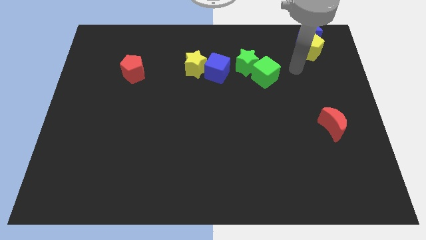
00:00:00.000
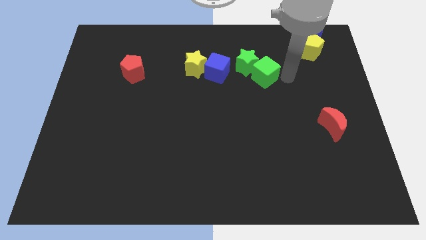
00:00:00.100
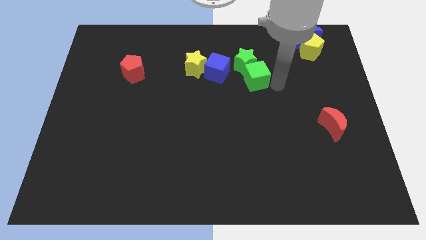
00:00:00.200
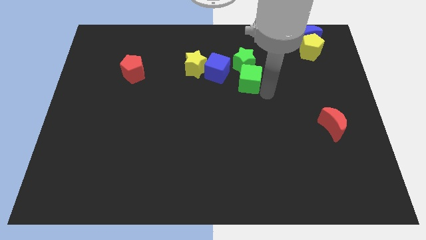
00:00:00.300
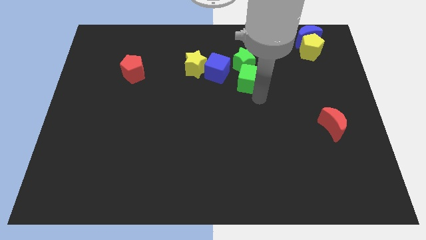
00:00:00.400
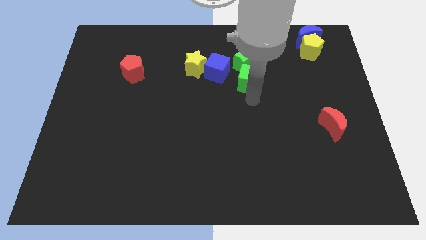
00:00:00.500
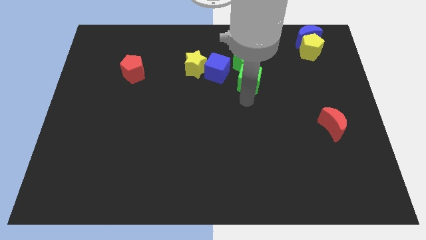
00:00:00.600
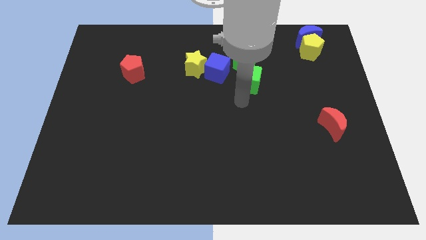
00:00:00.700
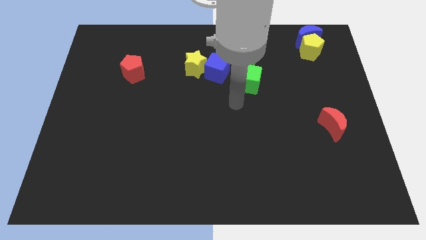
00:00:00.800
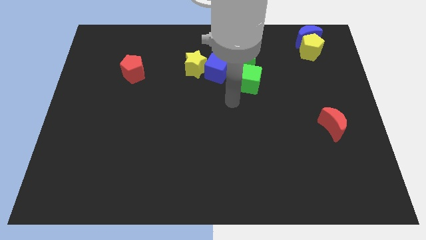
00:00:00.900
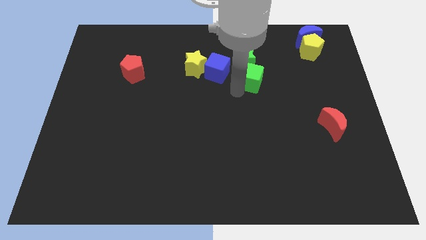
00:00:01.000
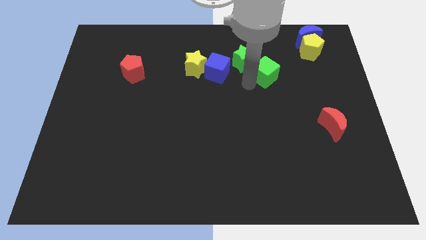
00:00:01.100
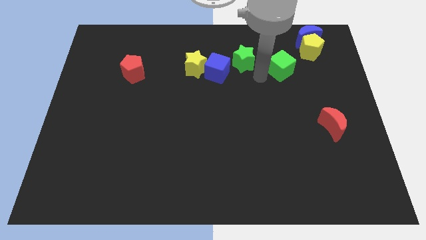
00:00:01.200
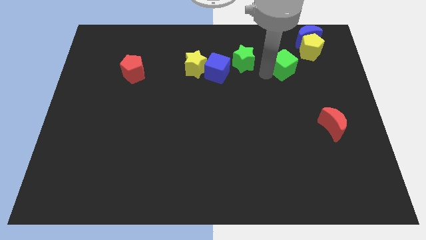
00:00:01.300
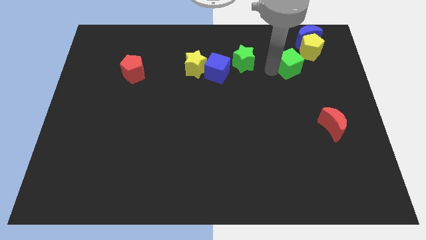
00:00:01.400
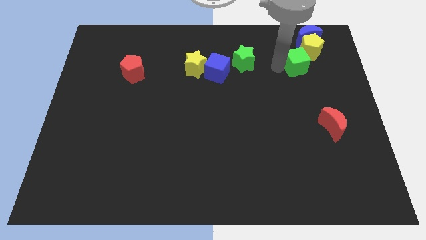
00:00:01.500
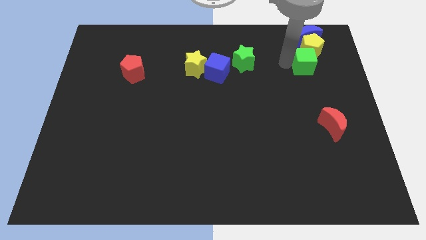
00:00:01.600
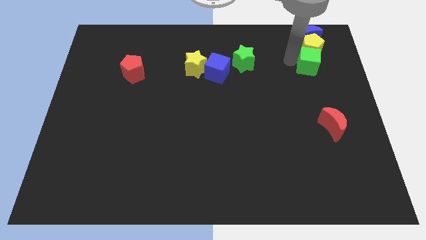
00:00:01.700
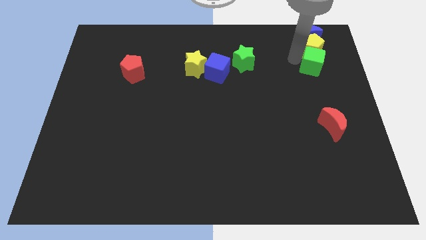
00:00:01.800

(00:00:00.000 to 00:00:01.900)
put green cube to the bottom side of the yellow pentagon

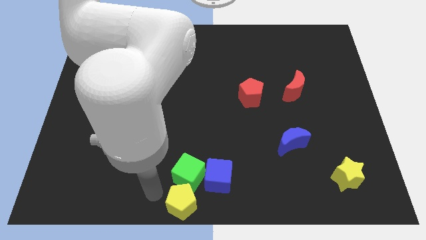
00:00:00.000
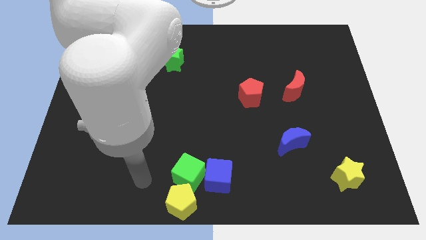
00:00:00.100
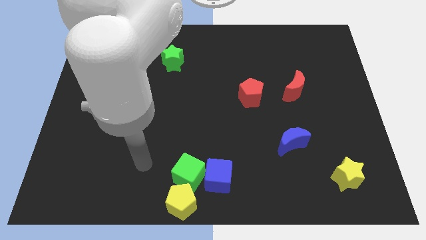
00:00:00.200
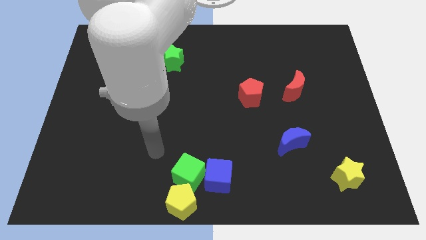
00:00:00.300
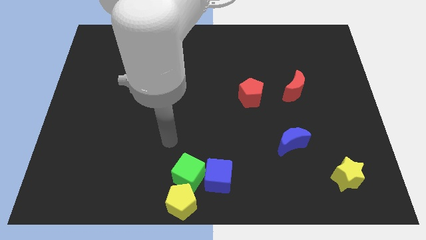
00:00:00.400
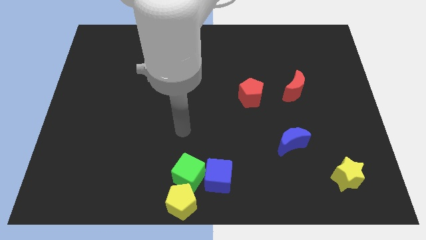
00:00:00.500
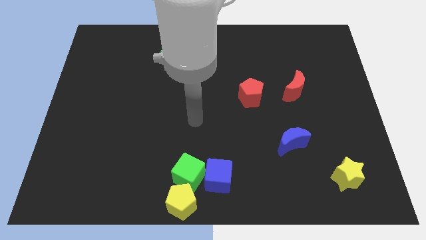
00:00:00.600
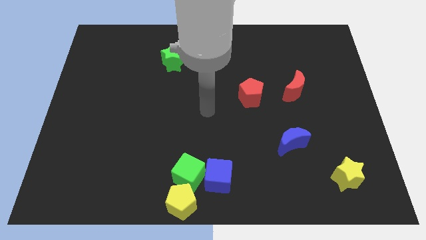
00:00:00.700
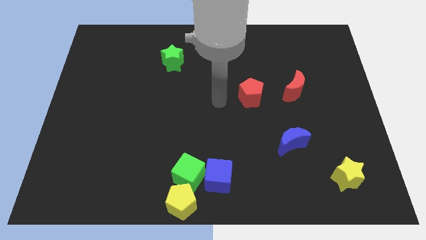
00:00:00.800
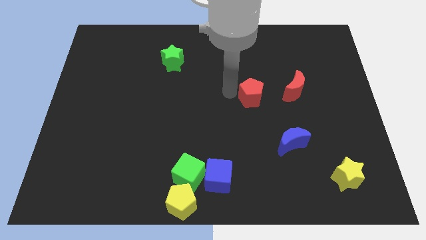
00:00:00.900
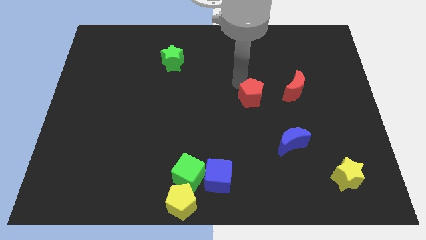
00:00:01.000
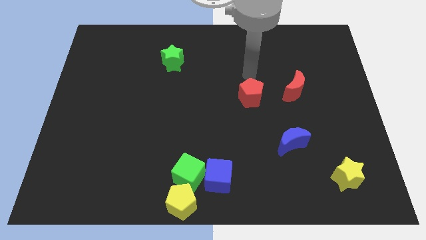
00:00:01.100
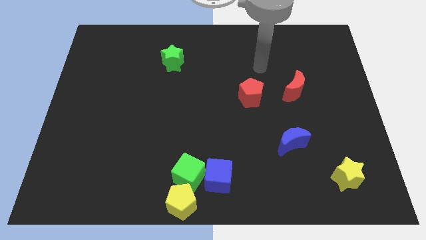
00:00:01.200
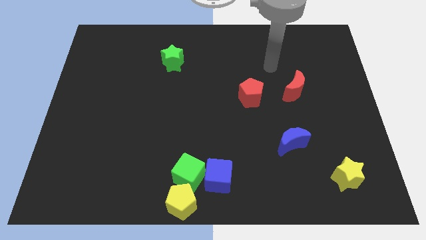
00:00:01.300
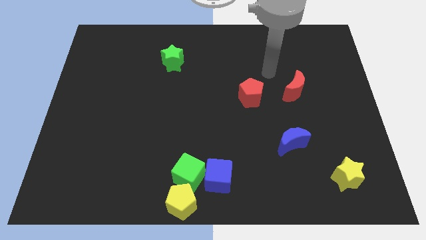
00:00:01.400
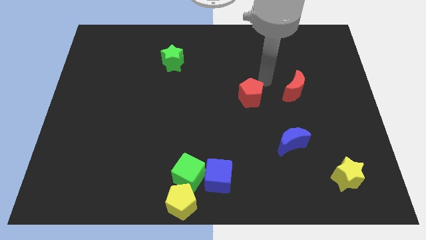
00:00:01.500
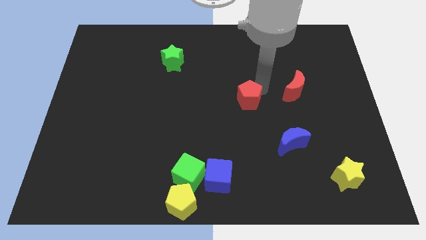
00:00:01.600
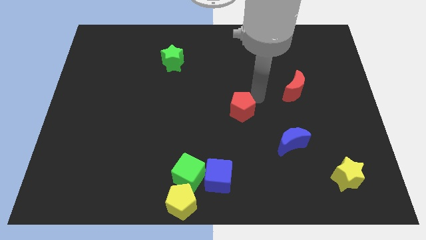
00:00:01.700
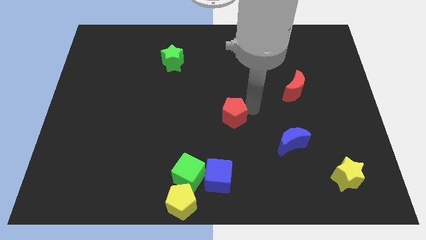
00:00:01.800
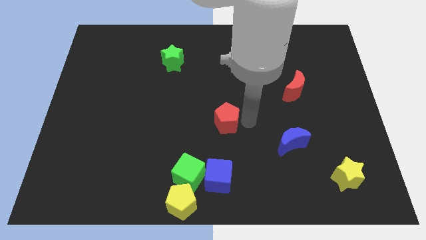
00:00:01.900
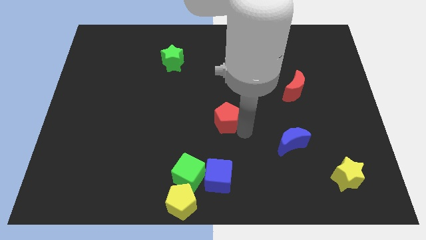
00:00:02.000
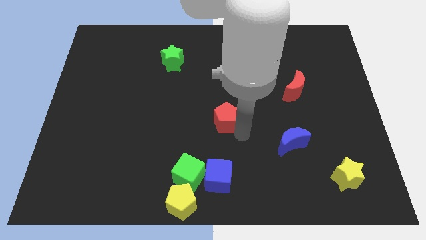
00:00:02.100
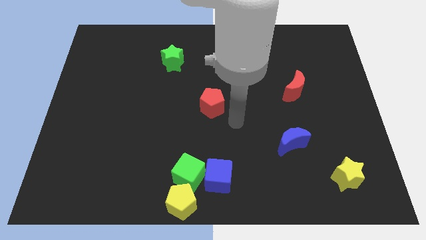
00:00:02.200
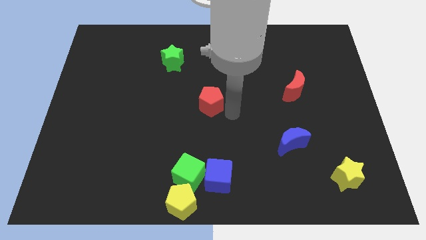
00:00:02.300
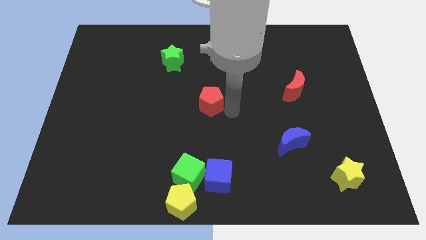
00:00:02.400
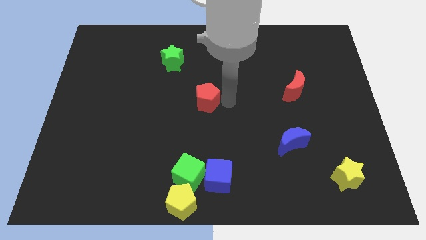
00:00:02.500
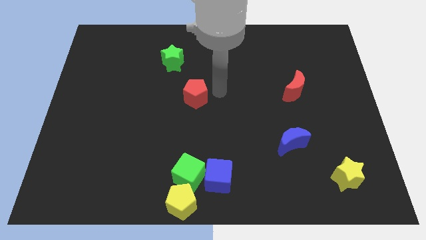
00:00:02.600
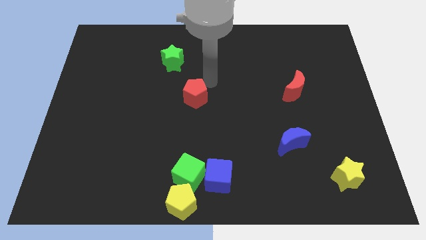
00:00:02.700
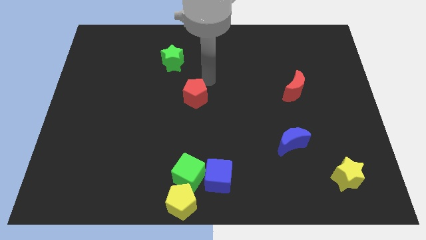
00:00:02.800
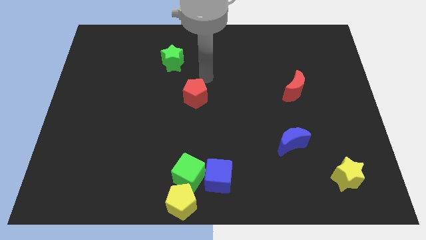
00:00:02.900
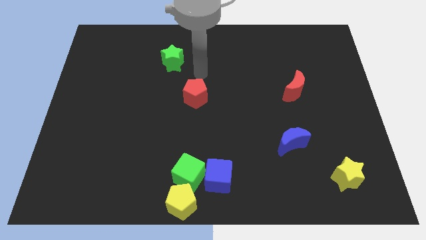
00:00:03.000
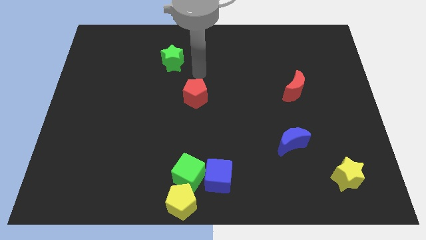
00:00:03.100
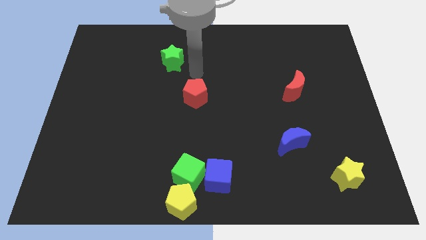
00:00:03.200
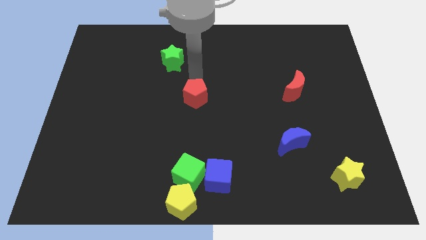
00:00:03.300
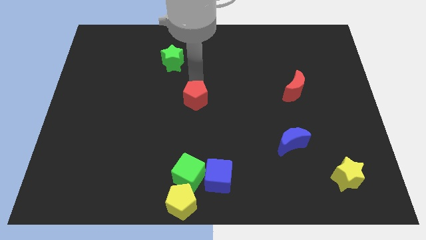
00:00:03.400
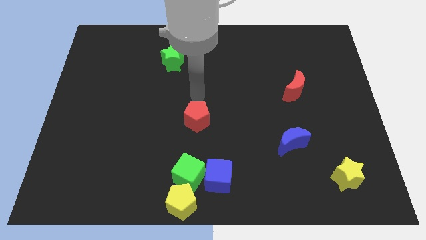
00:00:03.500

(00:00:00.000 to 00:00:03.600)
place the red pentagon at center of the board

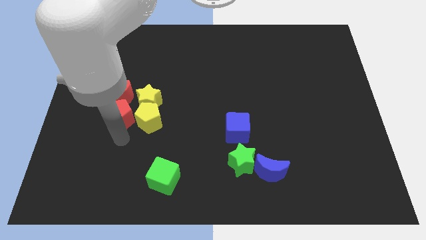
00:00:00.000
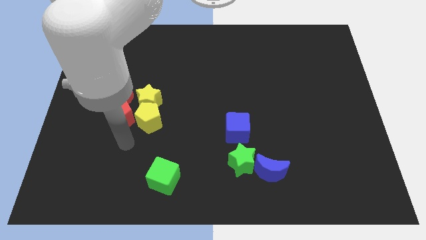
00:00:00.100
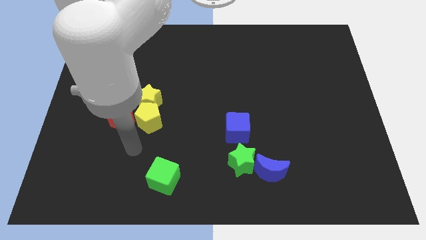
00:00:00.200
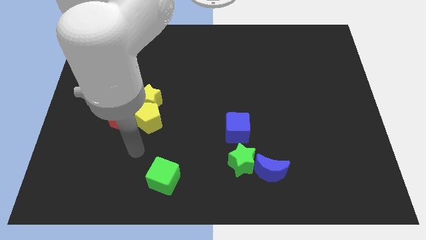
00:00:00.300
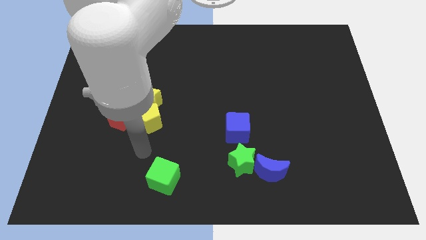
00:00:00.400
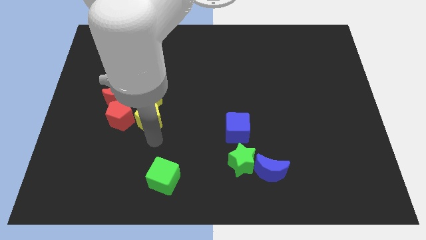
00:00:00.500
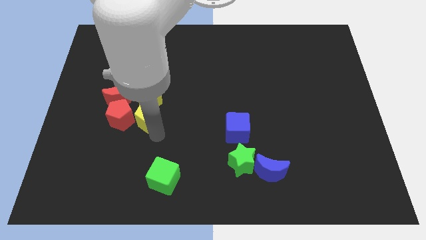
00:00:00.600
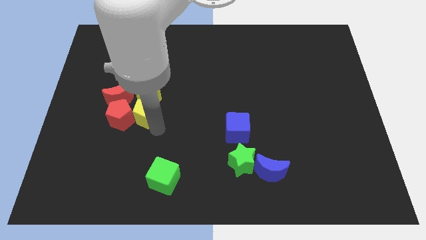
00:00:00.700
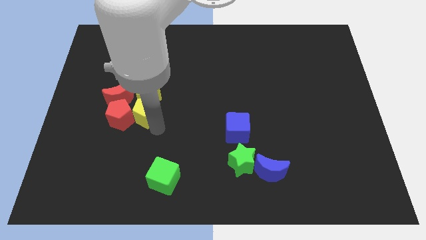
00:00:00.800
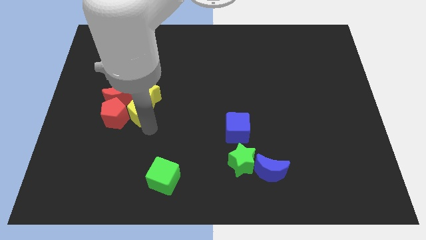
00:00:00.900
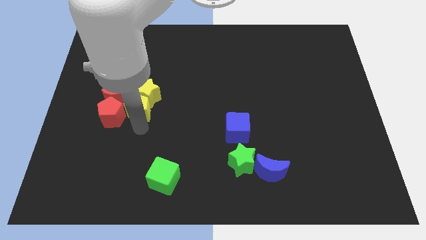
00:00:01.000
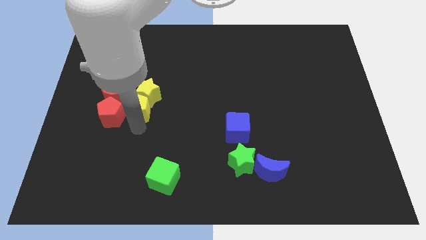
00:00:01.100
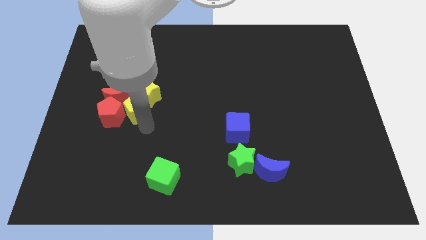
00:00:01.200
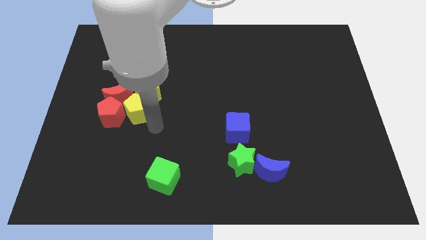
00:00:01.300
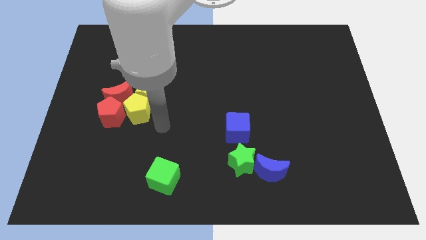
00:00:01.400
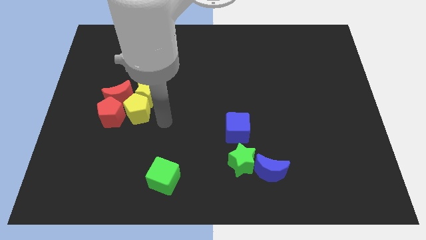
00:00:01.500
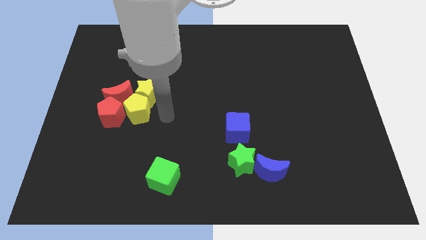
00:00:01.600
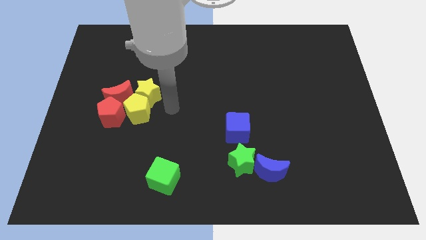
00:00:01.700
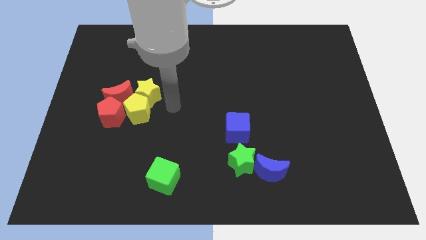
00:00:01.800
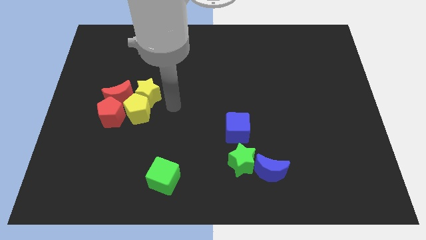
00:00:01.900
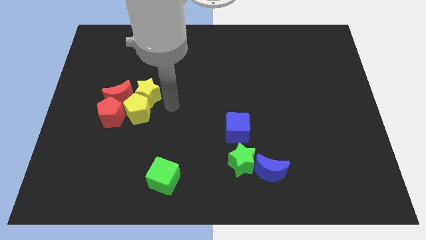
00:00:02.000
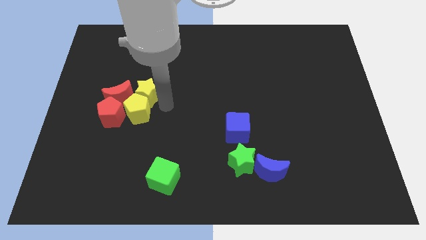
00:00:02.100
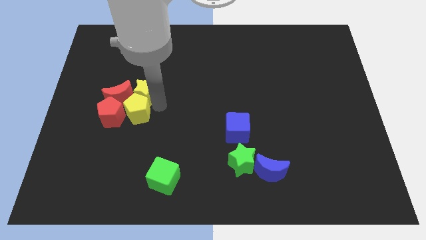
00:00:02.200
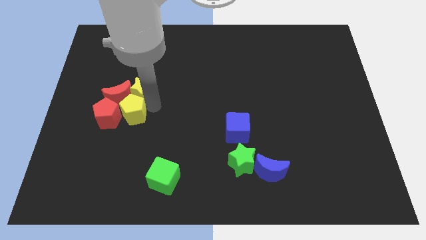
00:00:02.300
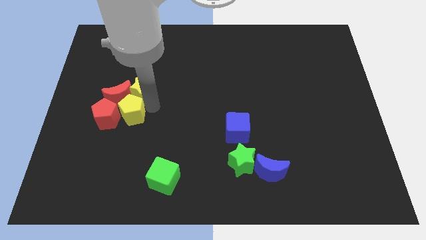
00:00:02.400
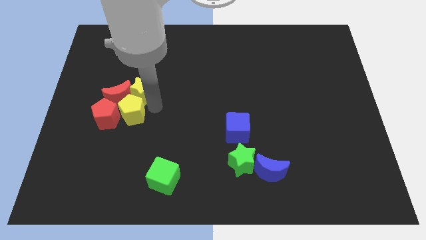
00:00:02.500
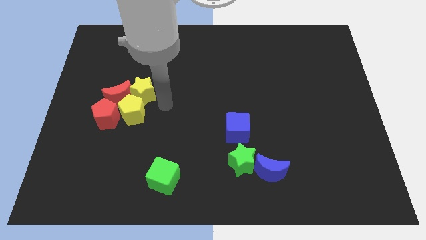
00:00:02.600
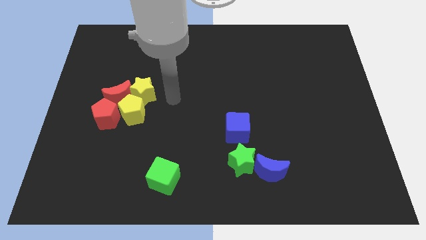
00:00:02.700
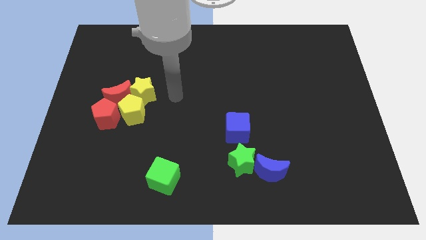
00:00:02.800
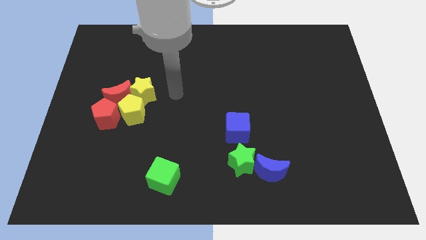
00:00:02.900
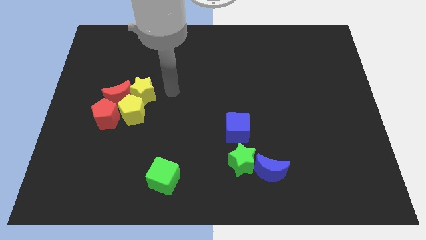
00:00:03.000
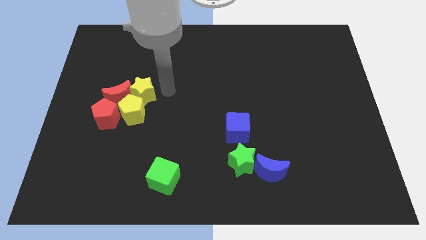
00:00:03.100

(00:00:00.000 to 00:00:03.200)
move yellow blocks close to red blocks
